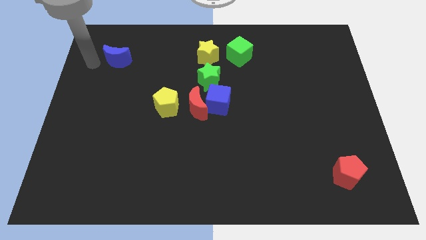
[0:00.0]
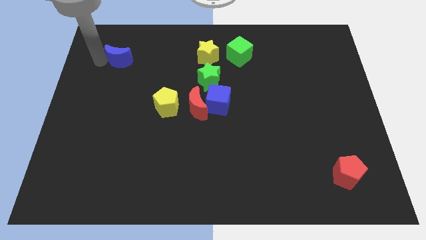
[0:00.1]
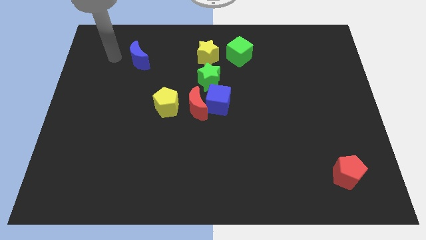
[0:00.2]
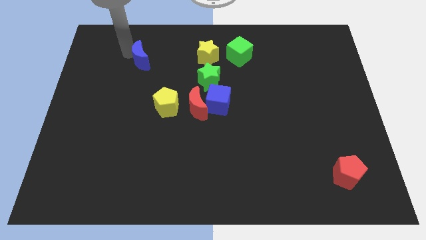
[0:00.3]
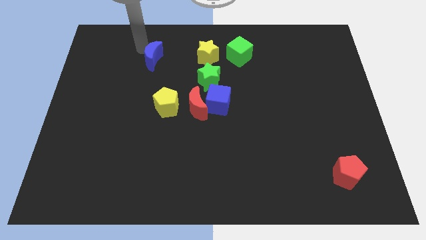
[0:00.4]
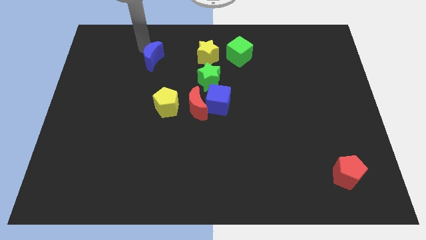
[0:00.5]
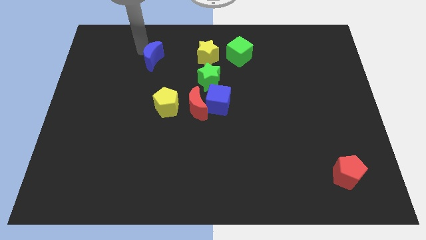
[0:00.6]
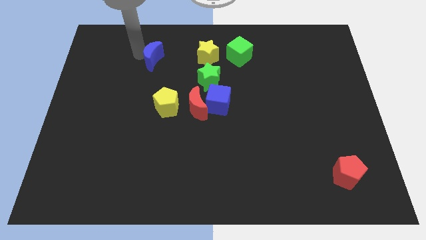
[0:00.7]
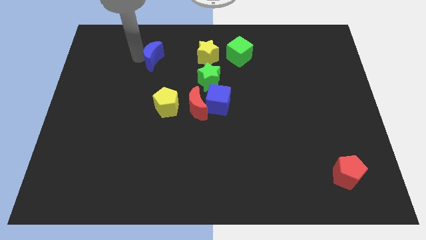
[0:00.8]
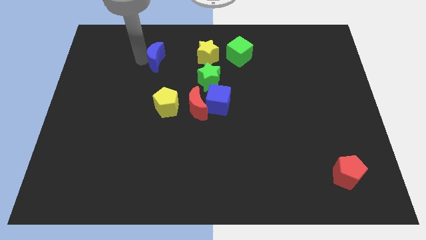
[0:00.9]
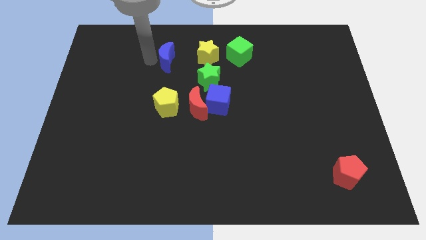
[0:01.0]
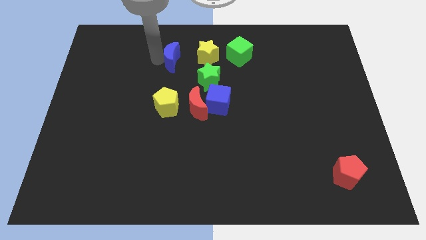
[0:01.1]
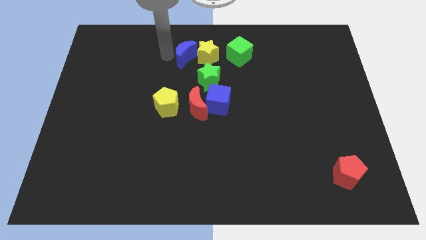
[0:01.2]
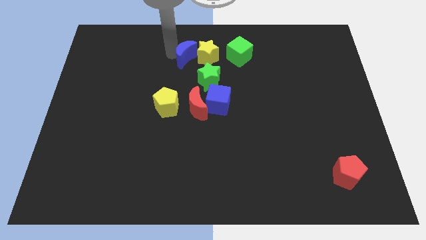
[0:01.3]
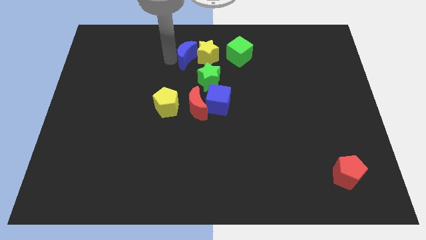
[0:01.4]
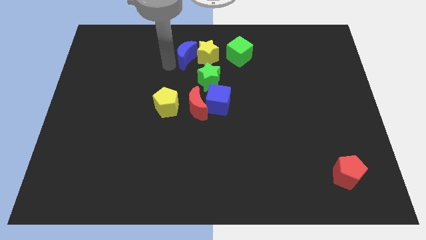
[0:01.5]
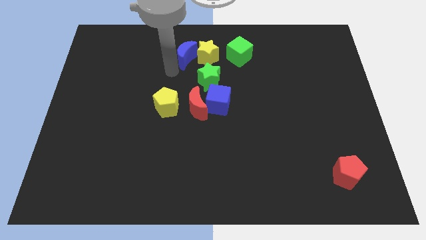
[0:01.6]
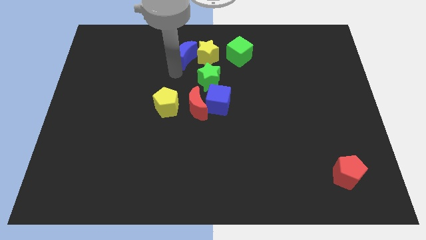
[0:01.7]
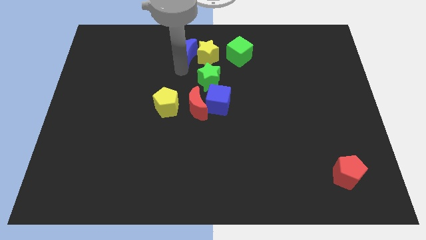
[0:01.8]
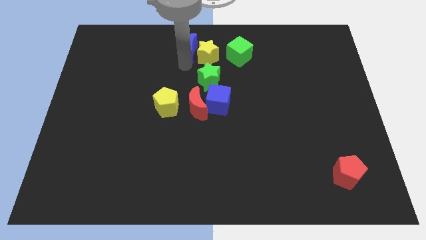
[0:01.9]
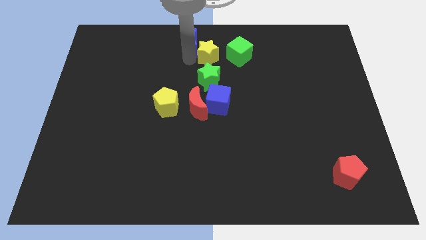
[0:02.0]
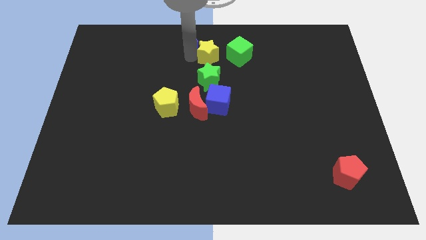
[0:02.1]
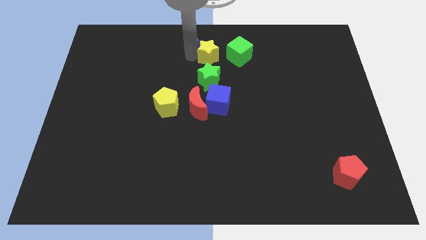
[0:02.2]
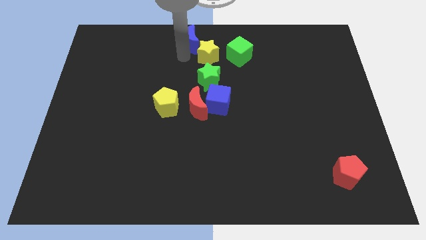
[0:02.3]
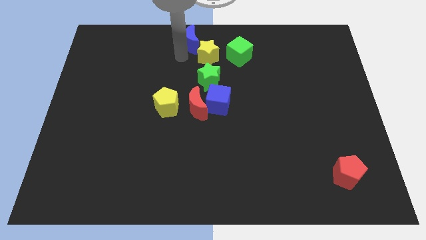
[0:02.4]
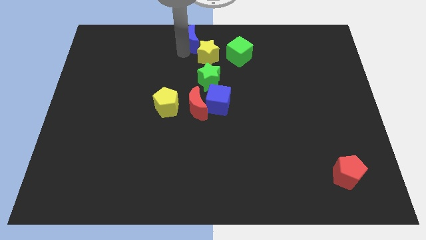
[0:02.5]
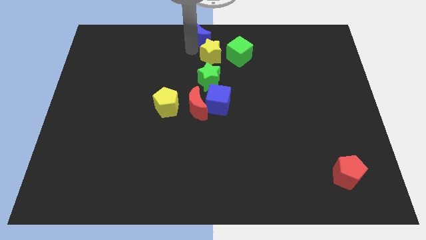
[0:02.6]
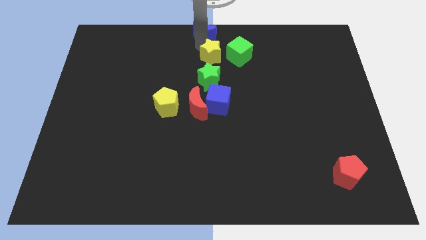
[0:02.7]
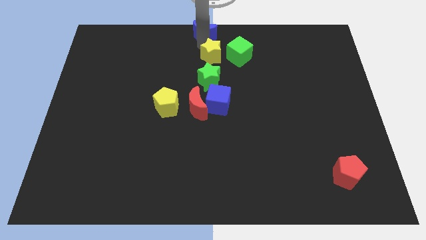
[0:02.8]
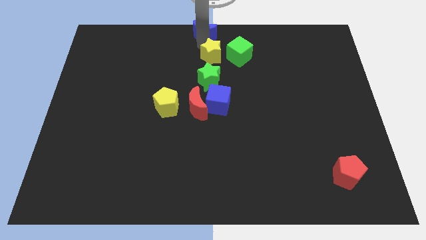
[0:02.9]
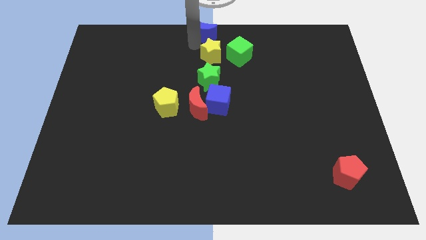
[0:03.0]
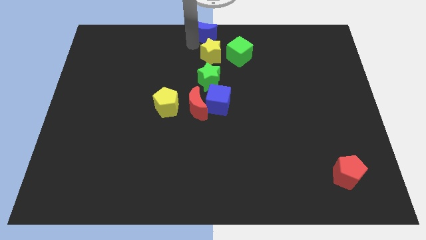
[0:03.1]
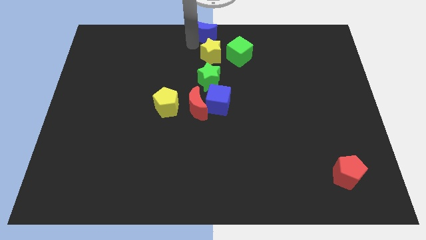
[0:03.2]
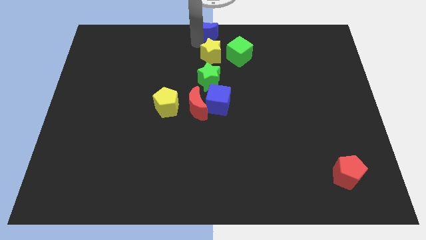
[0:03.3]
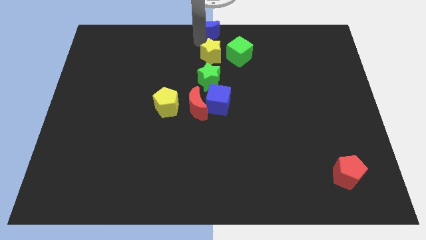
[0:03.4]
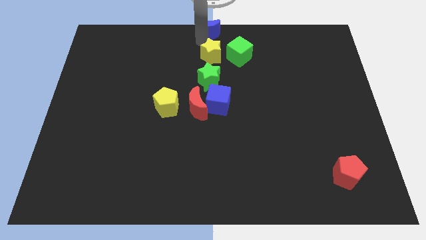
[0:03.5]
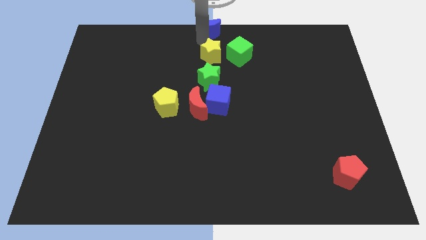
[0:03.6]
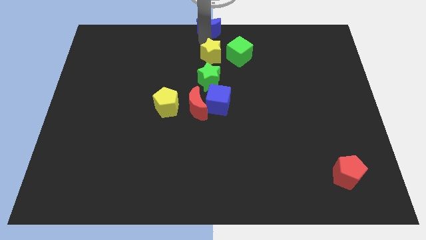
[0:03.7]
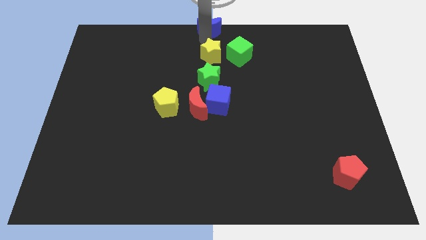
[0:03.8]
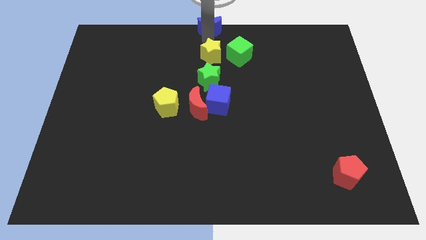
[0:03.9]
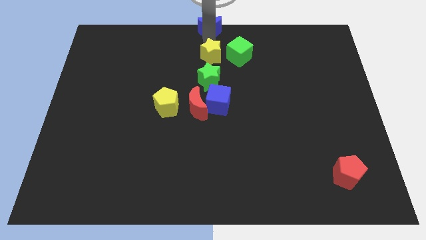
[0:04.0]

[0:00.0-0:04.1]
place the blue moon to the top center of the board

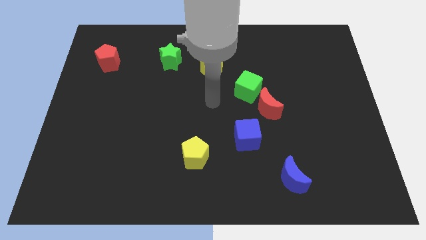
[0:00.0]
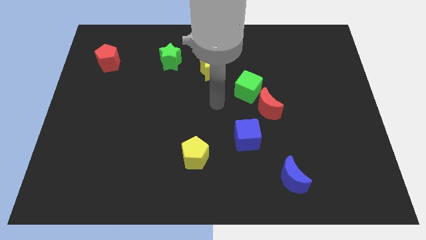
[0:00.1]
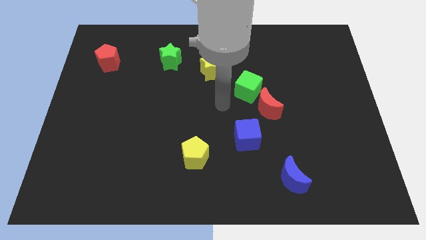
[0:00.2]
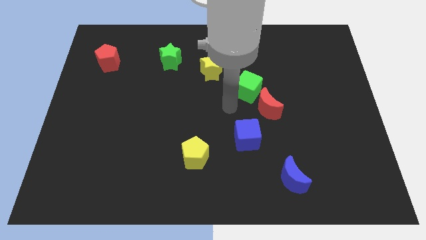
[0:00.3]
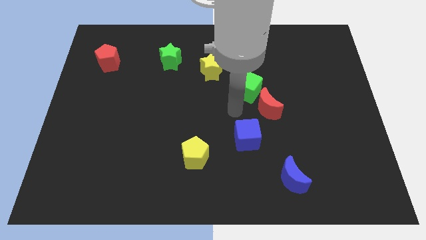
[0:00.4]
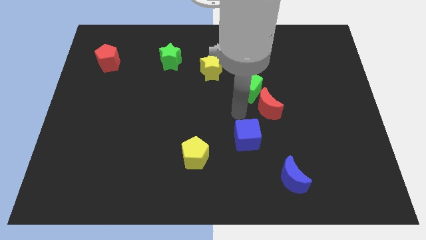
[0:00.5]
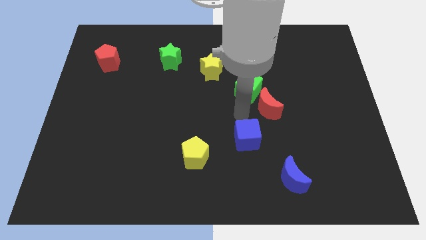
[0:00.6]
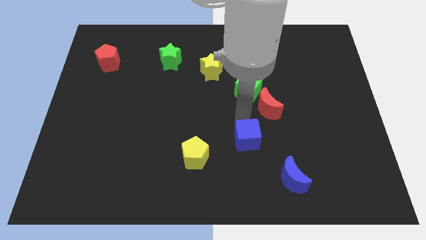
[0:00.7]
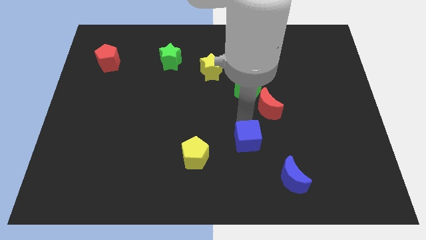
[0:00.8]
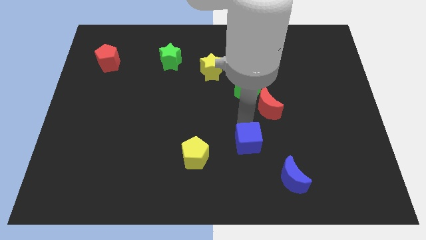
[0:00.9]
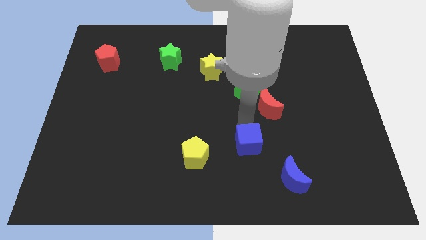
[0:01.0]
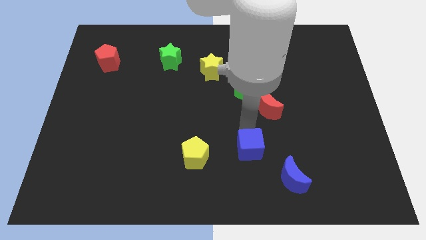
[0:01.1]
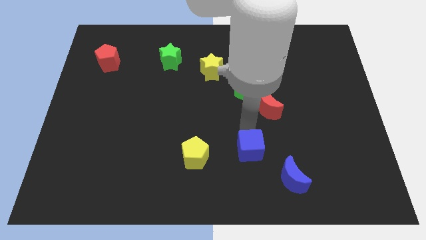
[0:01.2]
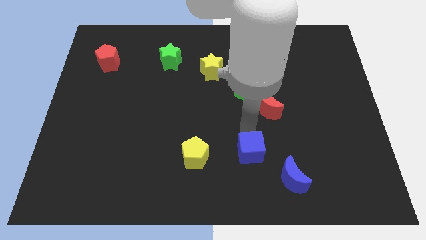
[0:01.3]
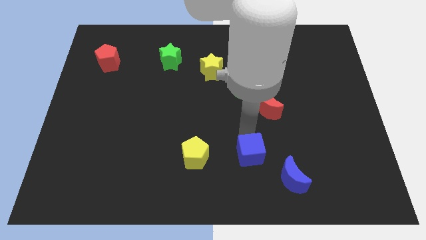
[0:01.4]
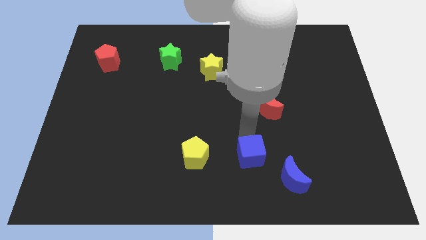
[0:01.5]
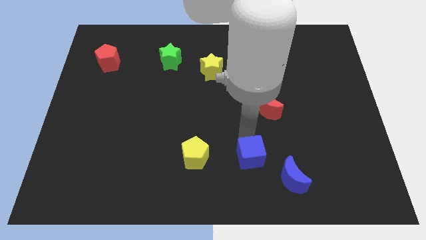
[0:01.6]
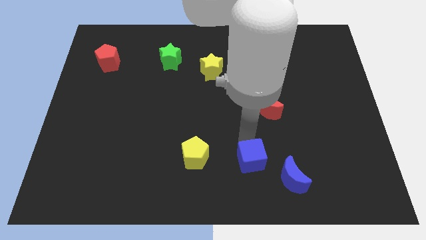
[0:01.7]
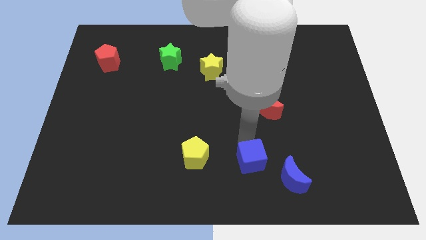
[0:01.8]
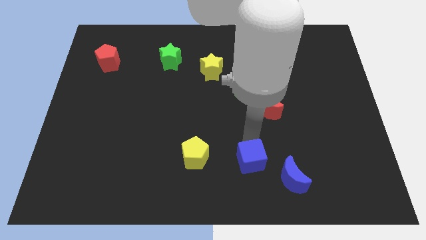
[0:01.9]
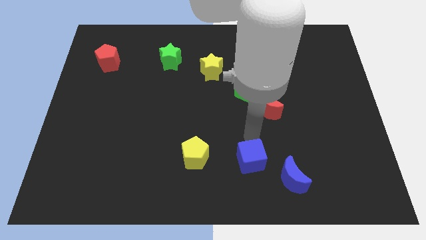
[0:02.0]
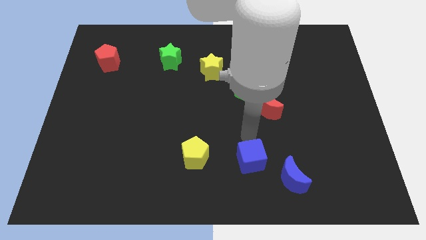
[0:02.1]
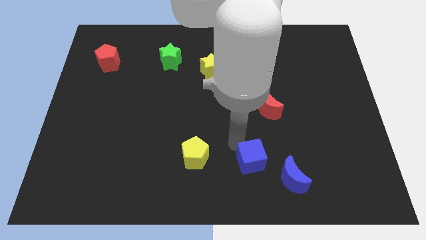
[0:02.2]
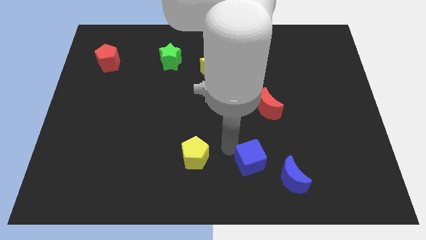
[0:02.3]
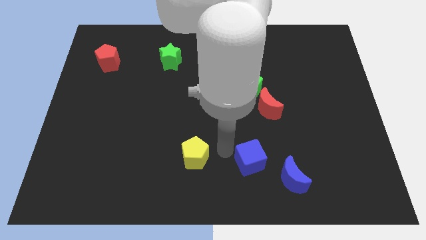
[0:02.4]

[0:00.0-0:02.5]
push the blue cube towards blue moon

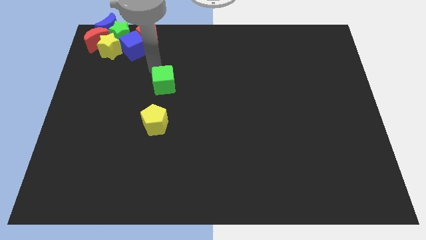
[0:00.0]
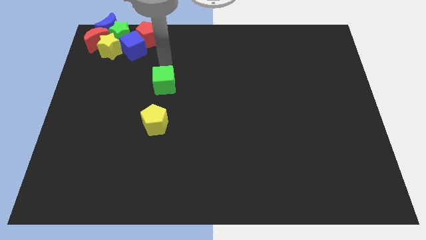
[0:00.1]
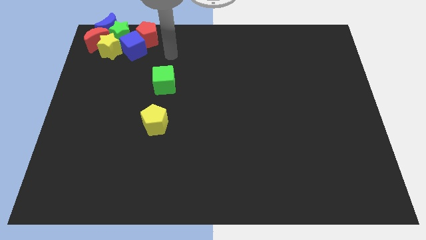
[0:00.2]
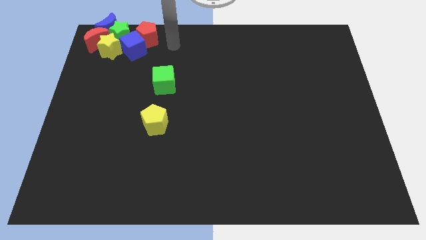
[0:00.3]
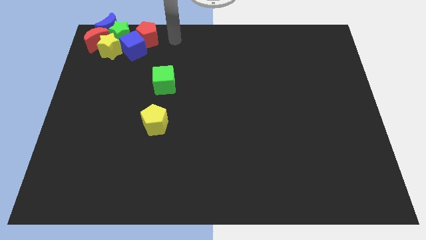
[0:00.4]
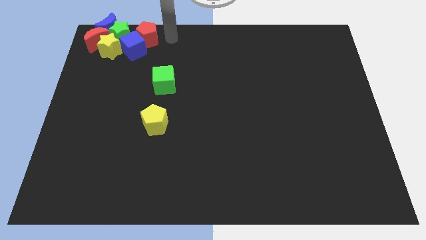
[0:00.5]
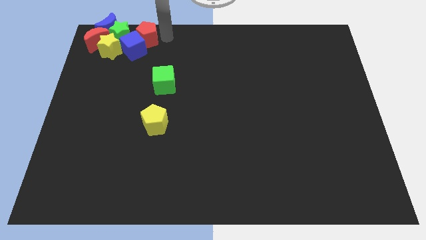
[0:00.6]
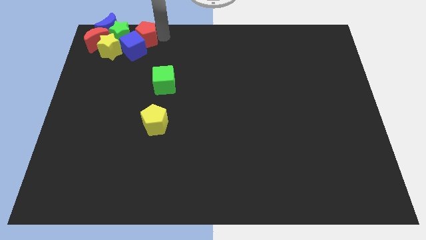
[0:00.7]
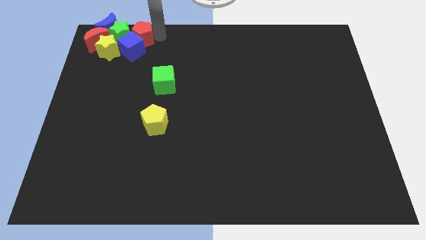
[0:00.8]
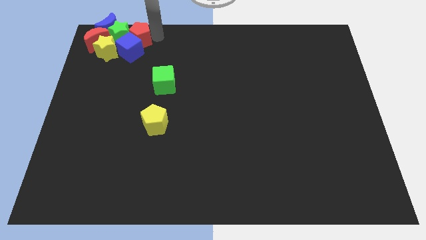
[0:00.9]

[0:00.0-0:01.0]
move the red pentagon into the group of blocks

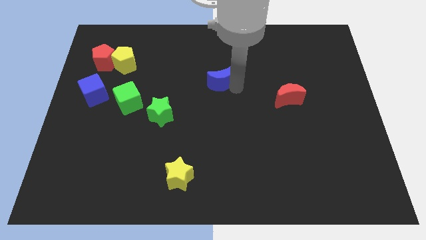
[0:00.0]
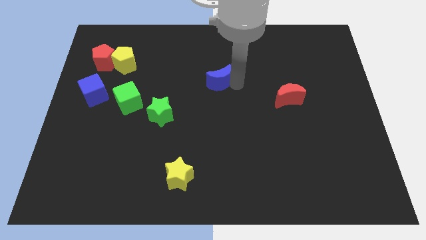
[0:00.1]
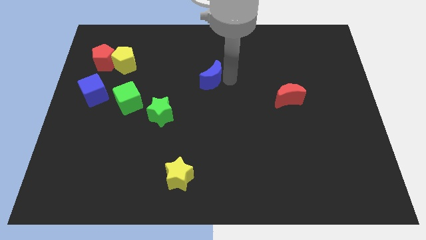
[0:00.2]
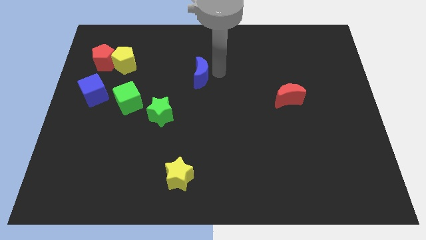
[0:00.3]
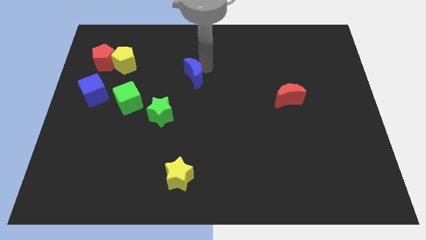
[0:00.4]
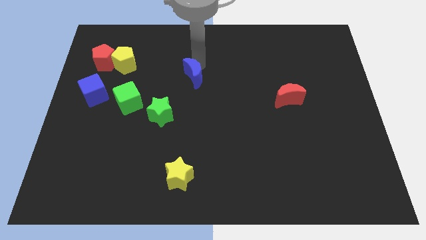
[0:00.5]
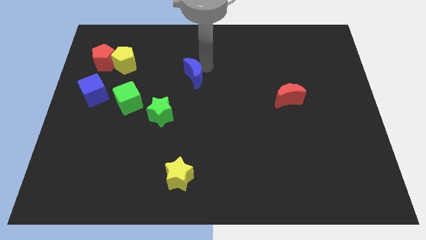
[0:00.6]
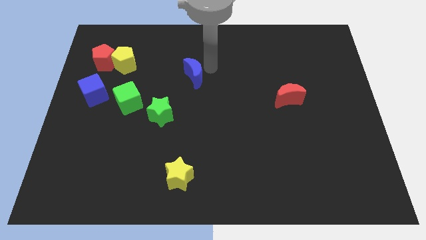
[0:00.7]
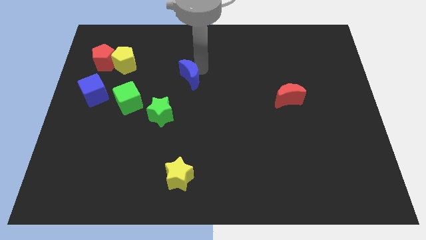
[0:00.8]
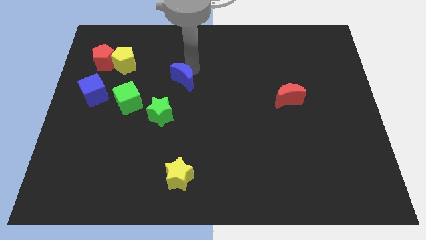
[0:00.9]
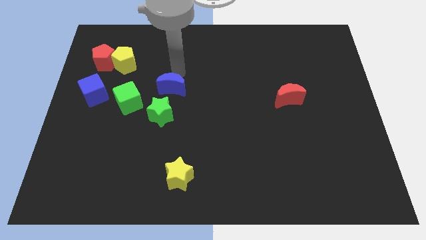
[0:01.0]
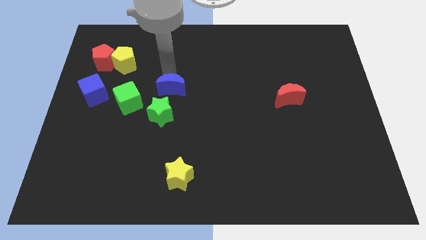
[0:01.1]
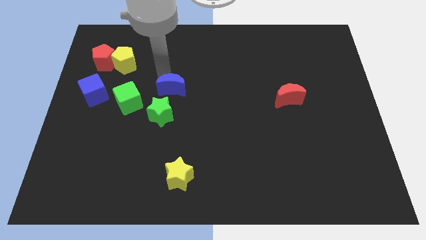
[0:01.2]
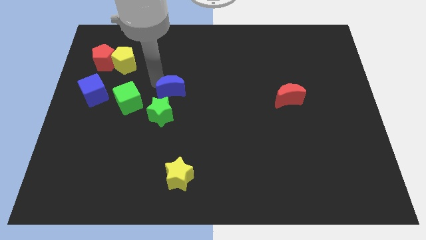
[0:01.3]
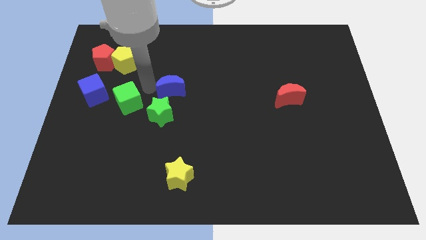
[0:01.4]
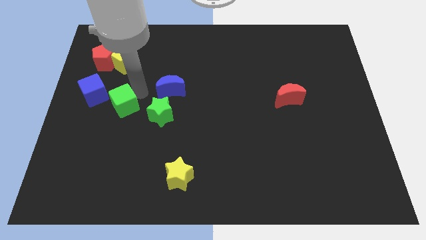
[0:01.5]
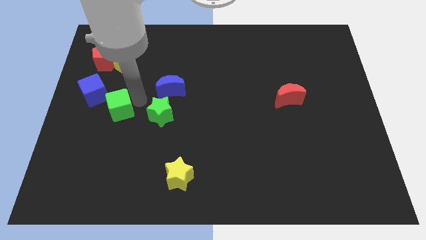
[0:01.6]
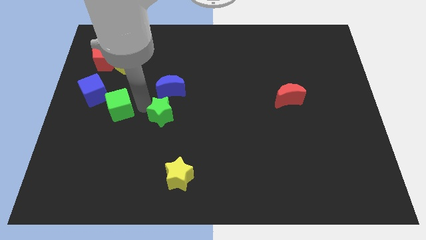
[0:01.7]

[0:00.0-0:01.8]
place the blue moon above the green star
